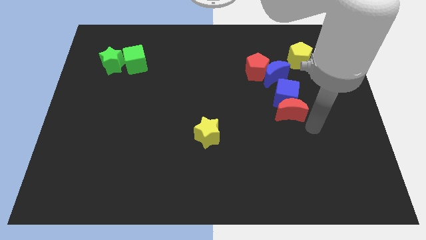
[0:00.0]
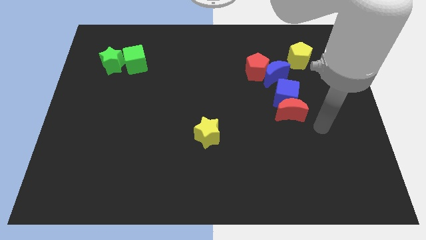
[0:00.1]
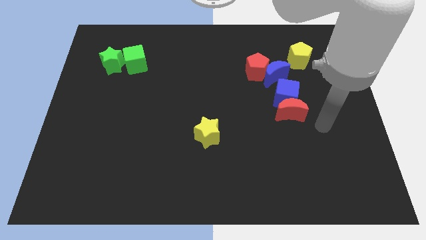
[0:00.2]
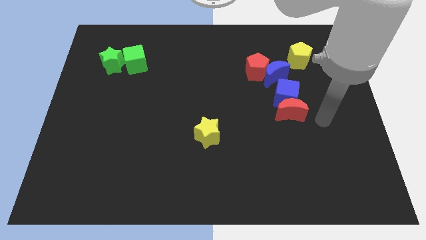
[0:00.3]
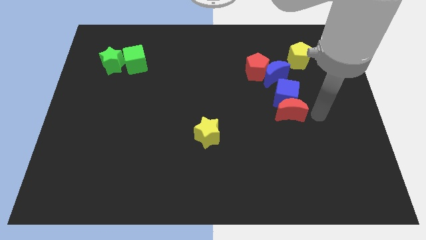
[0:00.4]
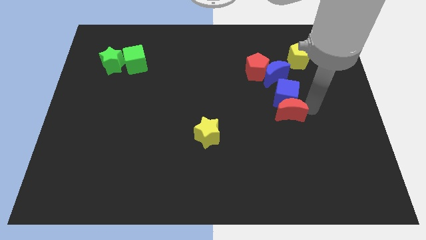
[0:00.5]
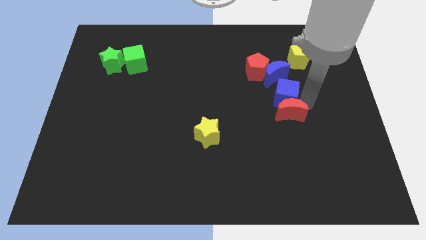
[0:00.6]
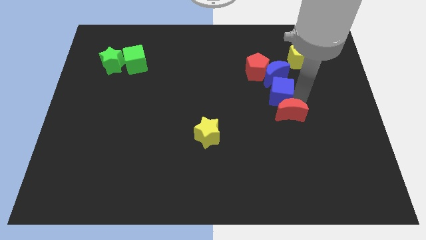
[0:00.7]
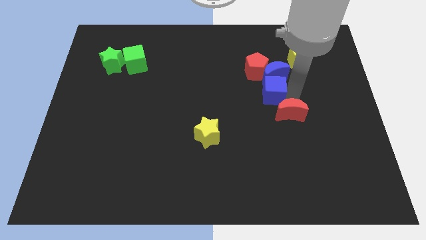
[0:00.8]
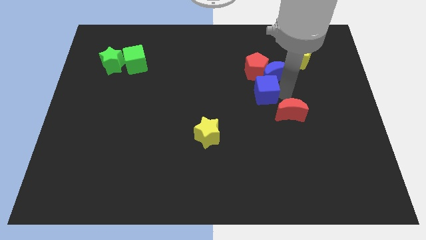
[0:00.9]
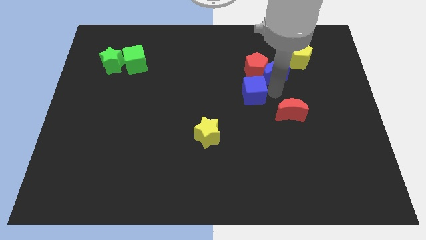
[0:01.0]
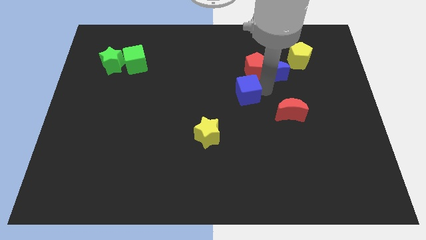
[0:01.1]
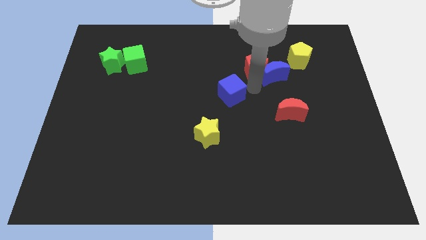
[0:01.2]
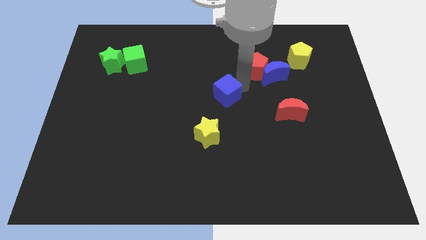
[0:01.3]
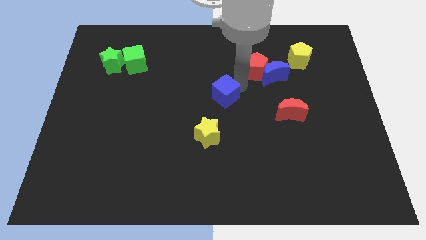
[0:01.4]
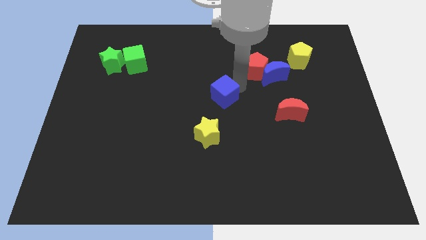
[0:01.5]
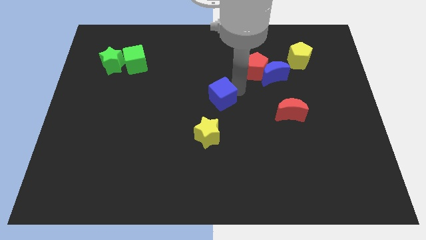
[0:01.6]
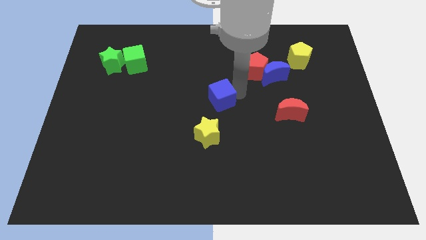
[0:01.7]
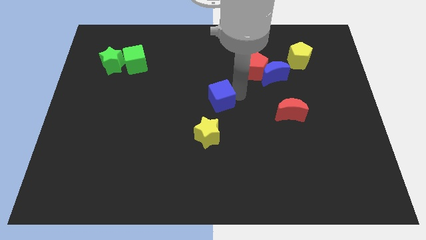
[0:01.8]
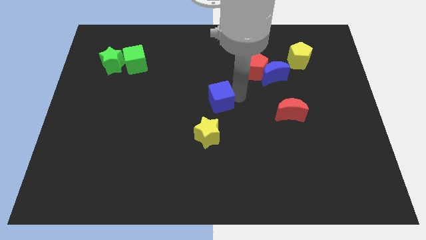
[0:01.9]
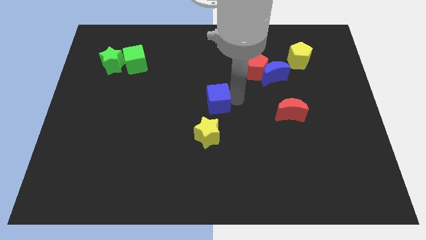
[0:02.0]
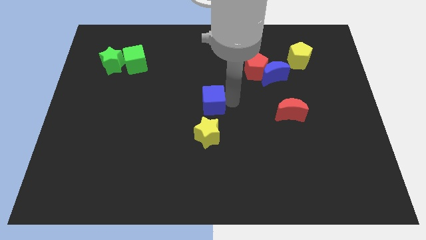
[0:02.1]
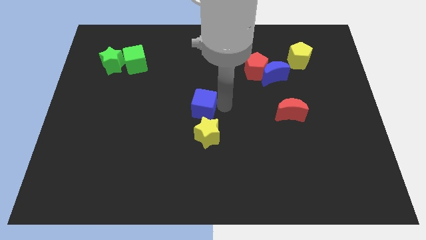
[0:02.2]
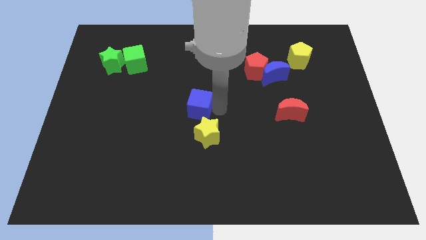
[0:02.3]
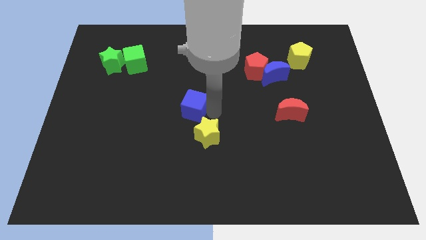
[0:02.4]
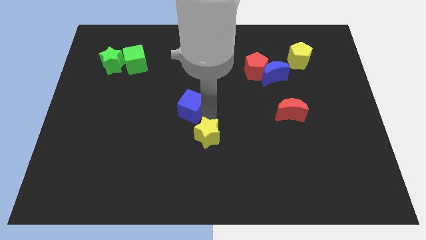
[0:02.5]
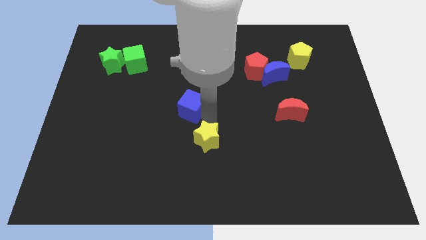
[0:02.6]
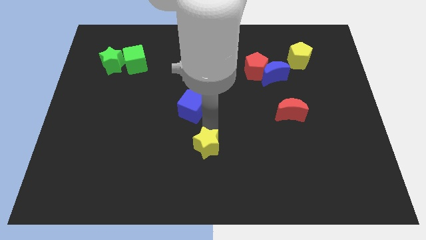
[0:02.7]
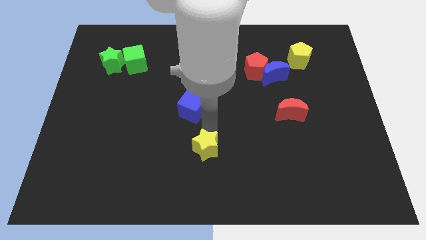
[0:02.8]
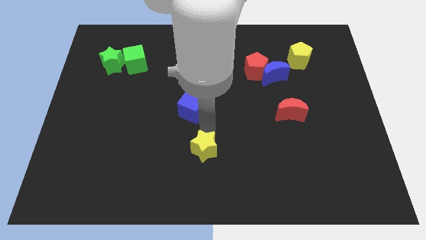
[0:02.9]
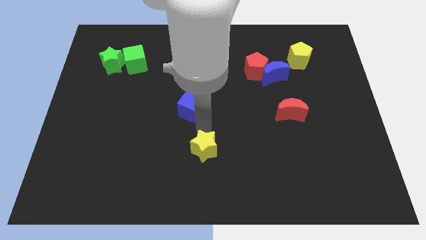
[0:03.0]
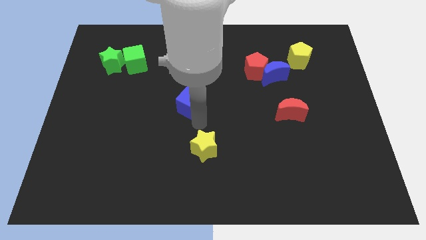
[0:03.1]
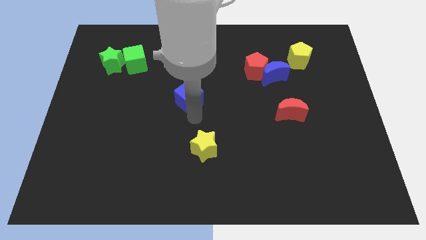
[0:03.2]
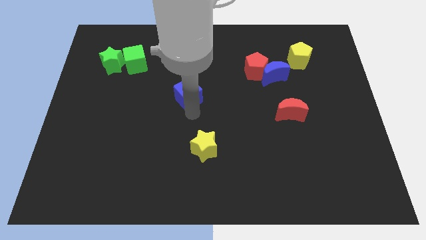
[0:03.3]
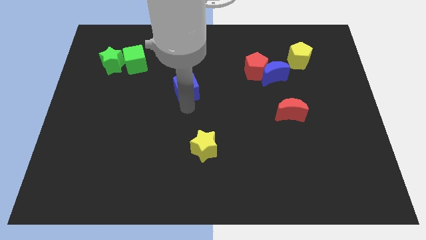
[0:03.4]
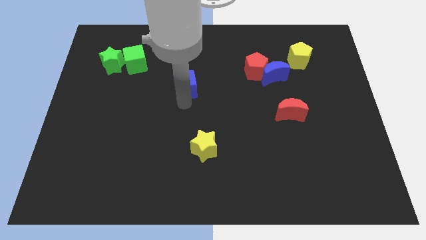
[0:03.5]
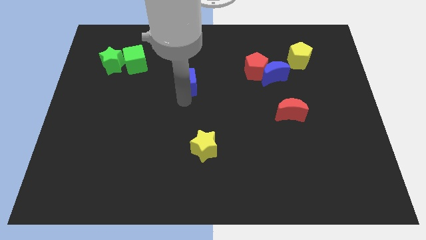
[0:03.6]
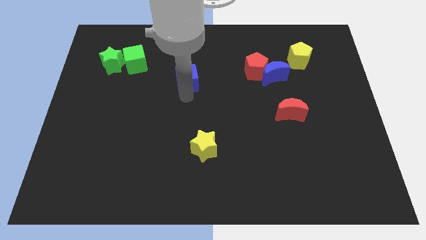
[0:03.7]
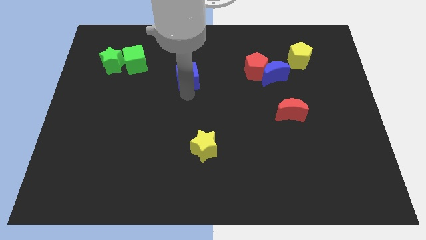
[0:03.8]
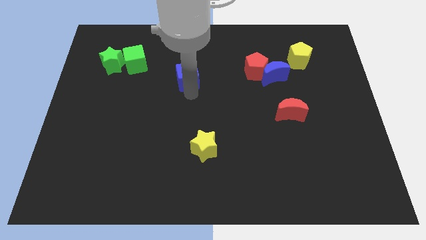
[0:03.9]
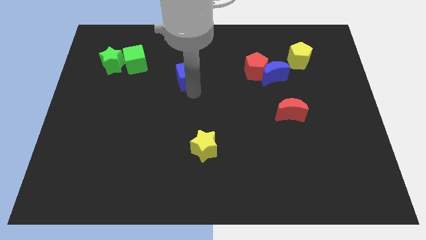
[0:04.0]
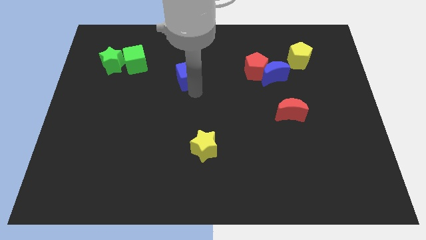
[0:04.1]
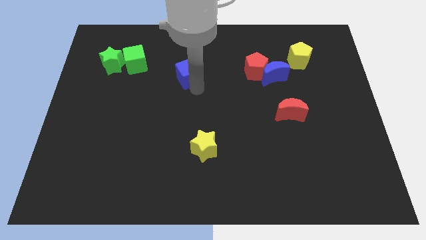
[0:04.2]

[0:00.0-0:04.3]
move the blue cube towards green cube

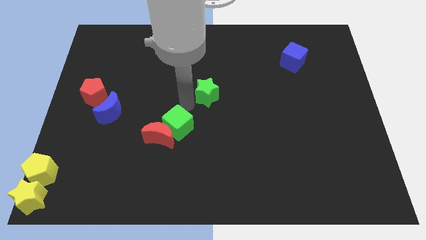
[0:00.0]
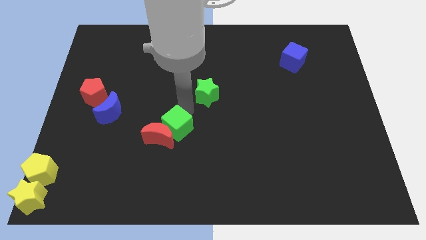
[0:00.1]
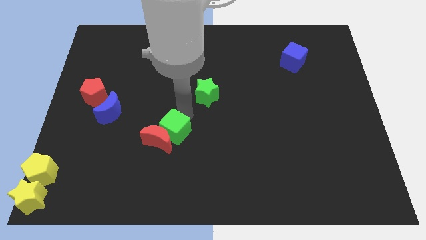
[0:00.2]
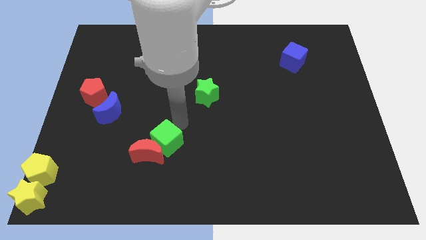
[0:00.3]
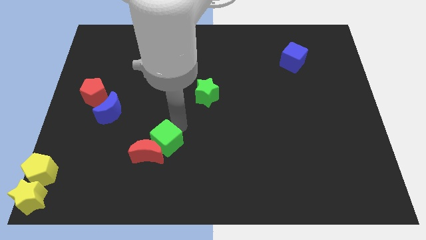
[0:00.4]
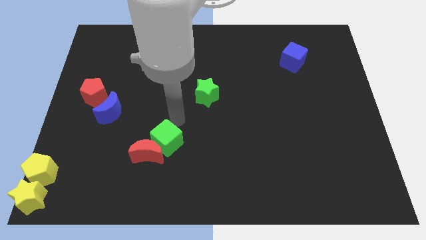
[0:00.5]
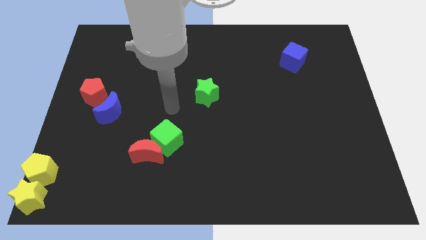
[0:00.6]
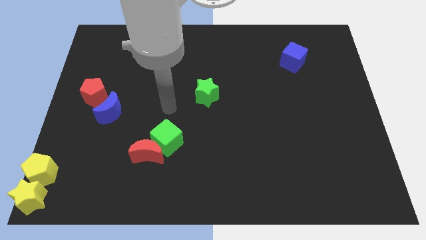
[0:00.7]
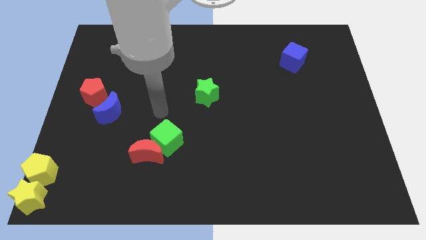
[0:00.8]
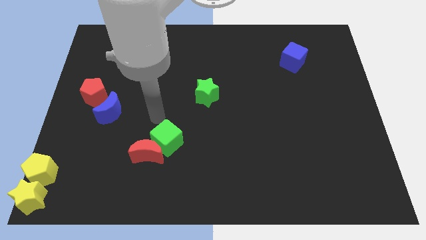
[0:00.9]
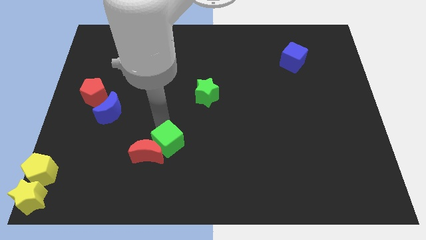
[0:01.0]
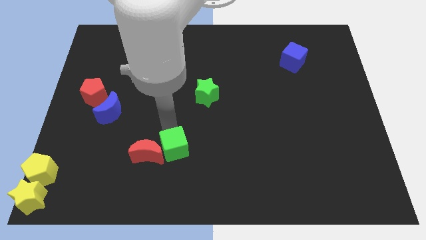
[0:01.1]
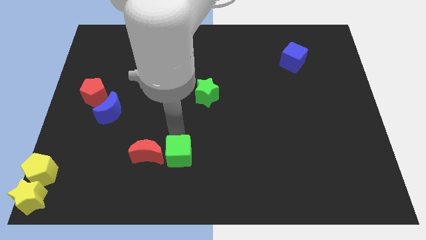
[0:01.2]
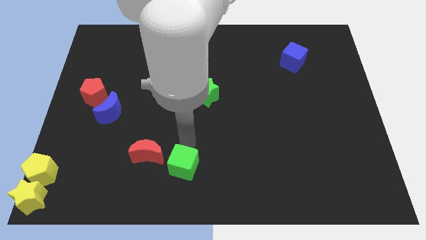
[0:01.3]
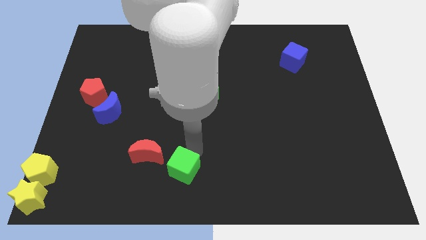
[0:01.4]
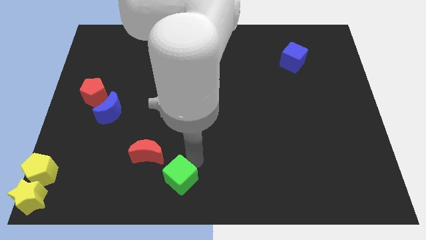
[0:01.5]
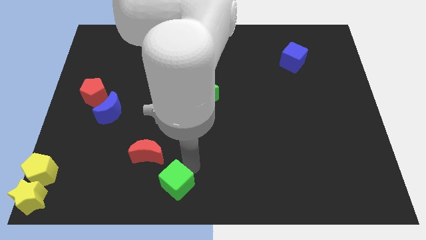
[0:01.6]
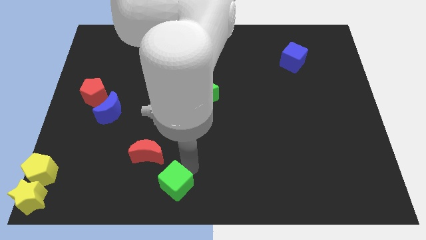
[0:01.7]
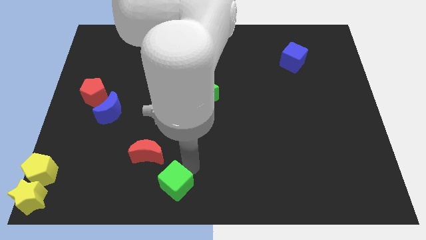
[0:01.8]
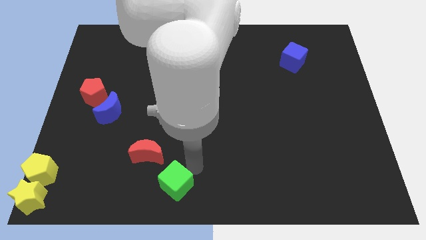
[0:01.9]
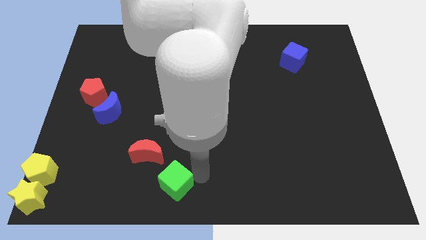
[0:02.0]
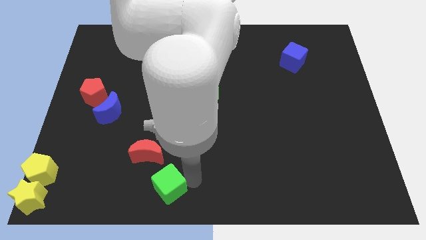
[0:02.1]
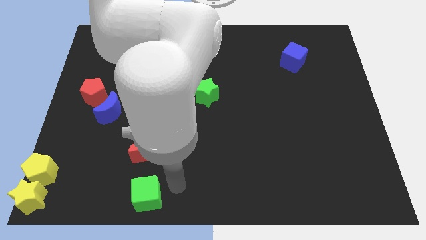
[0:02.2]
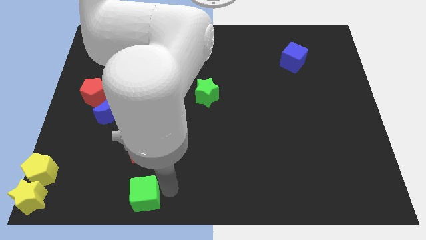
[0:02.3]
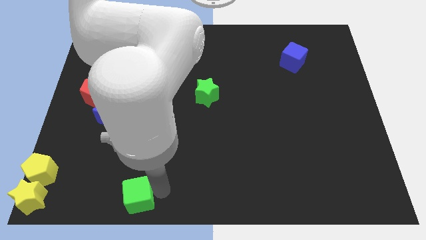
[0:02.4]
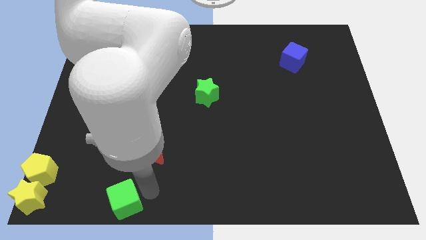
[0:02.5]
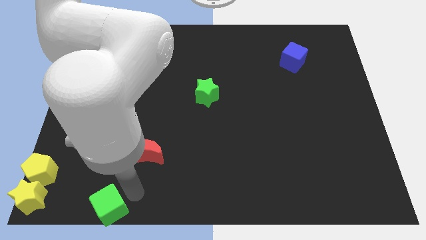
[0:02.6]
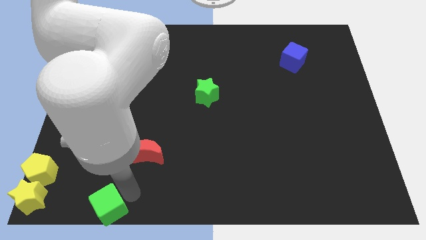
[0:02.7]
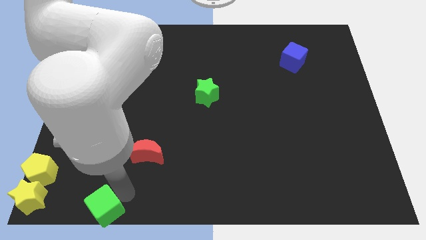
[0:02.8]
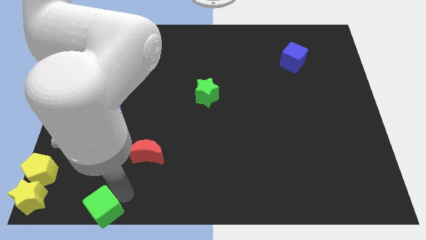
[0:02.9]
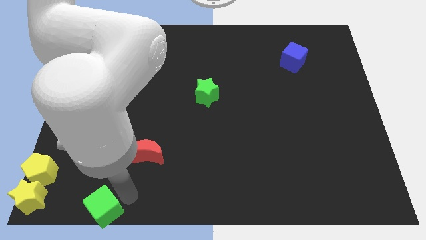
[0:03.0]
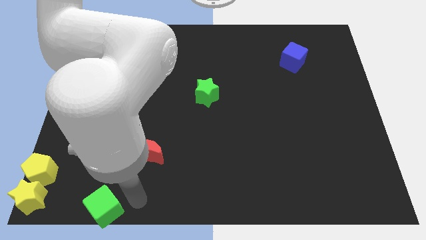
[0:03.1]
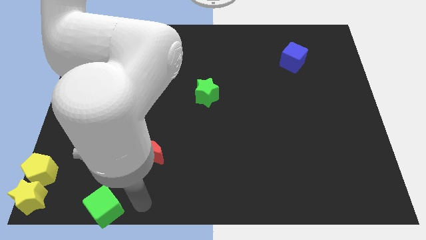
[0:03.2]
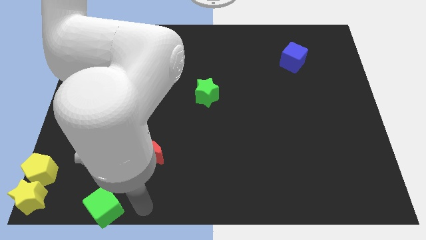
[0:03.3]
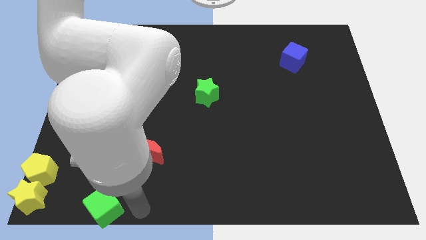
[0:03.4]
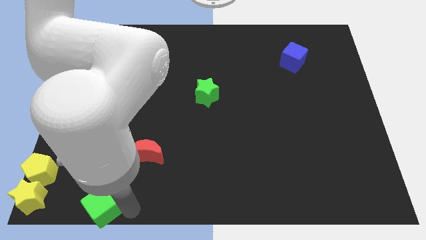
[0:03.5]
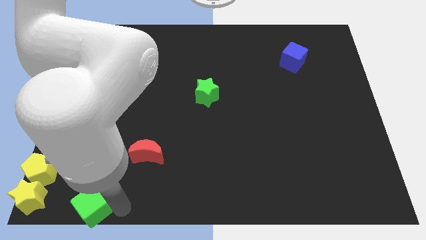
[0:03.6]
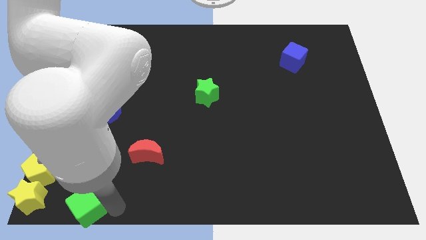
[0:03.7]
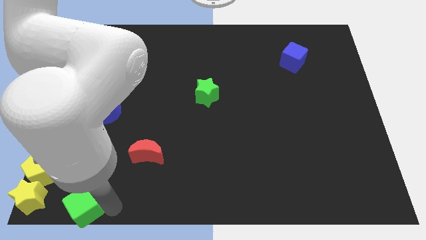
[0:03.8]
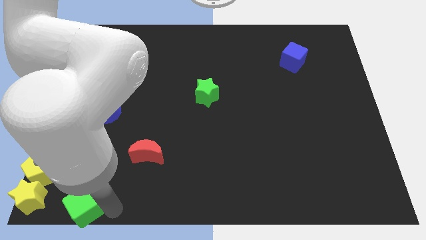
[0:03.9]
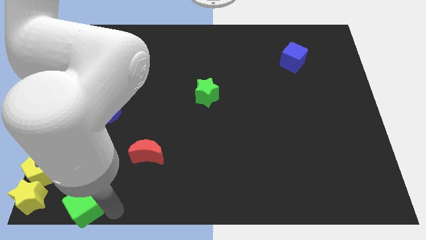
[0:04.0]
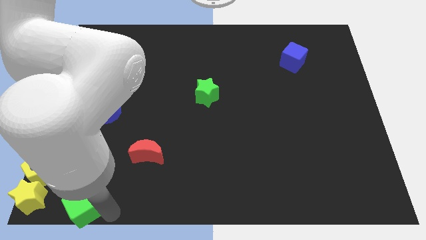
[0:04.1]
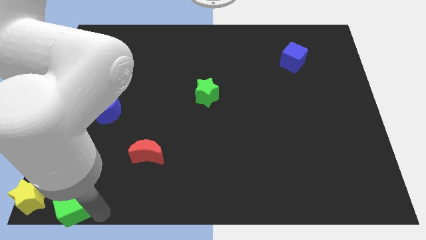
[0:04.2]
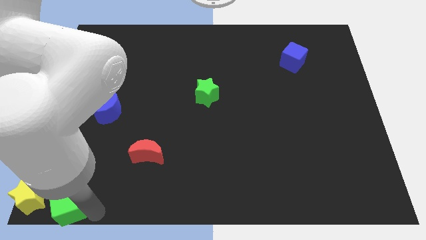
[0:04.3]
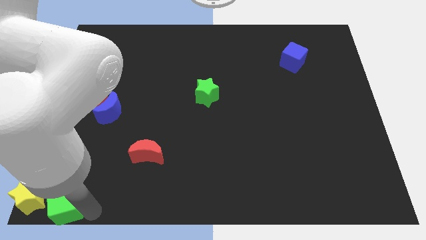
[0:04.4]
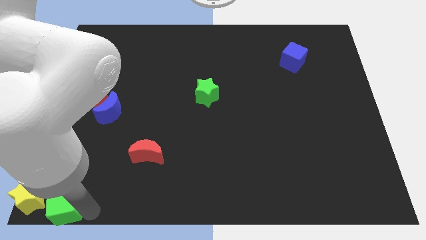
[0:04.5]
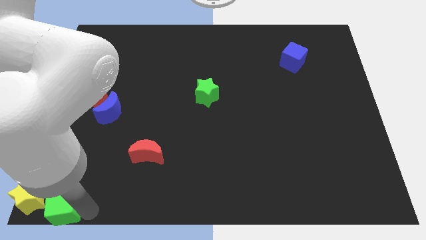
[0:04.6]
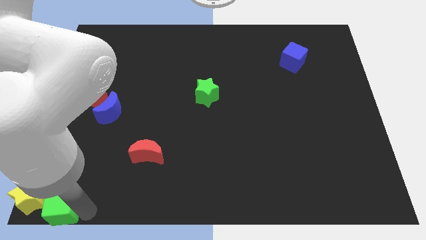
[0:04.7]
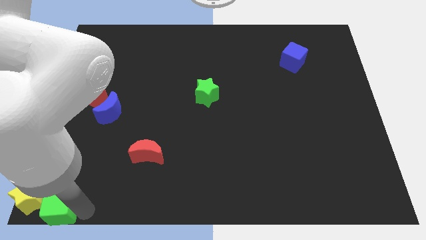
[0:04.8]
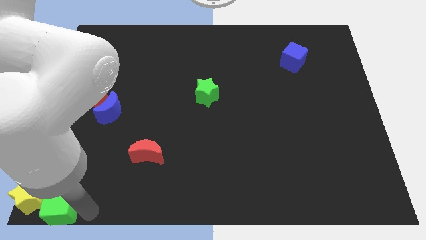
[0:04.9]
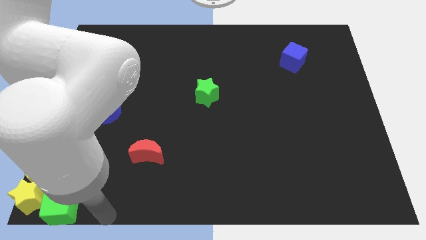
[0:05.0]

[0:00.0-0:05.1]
push the green cube to right side of the yellow star
